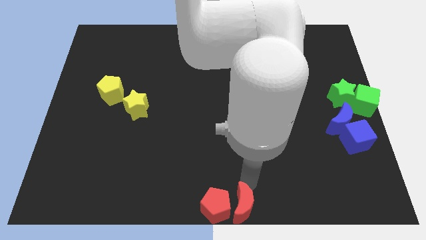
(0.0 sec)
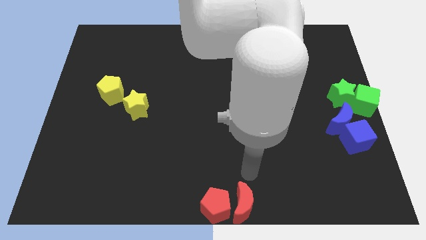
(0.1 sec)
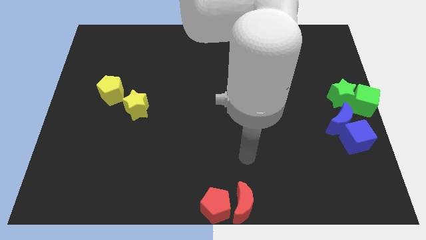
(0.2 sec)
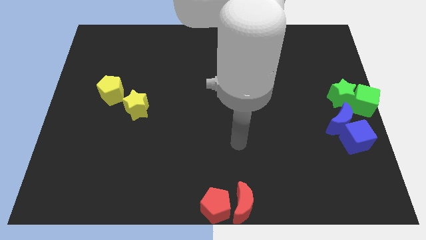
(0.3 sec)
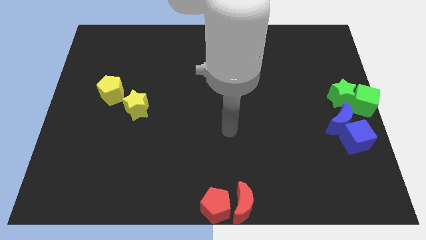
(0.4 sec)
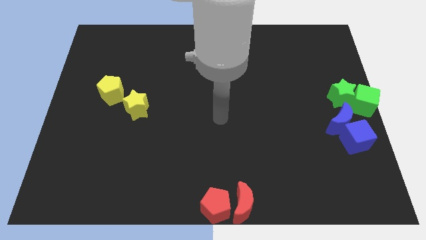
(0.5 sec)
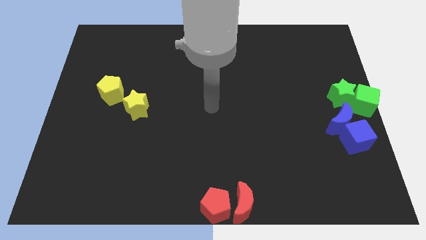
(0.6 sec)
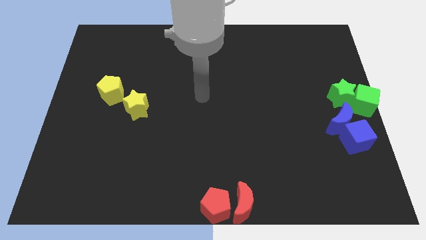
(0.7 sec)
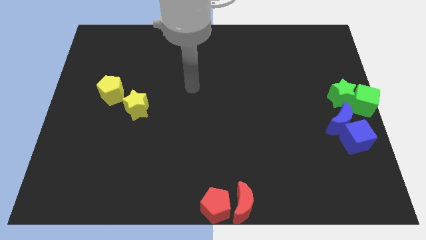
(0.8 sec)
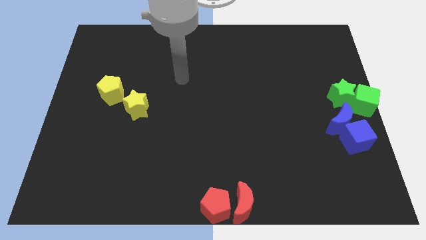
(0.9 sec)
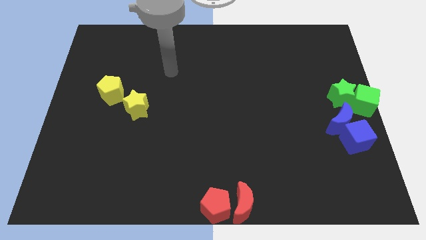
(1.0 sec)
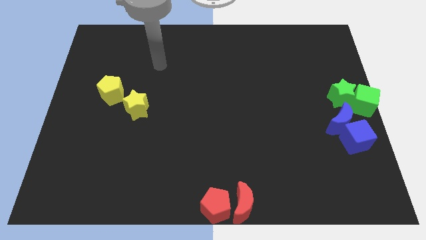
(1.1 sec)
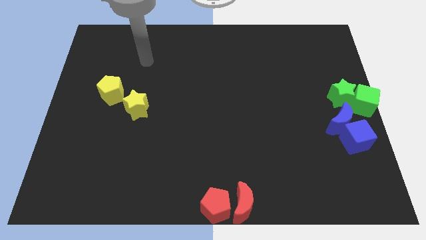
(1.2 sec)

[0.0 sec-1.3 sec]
move your arm away from the red moon

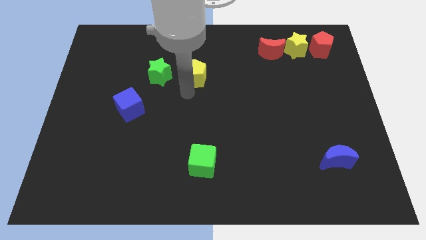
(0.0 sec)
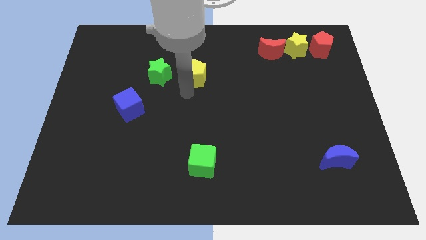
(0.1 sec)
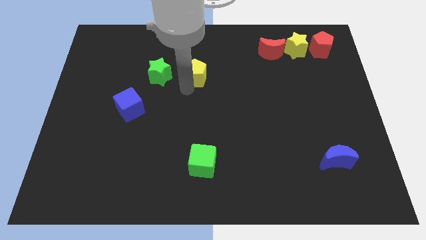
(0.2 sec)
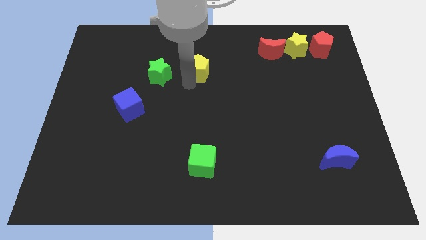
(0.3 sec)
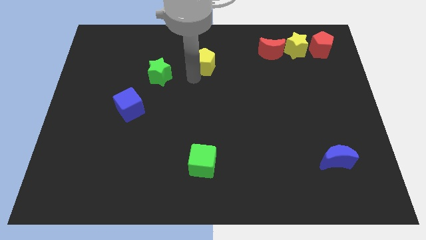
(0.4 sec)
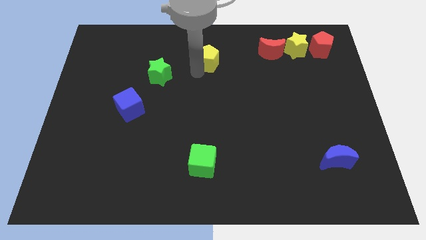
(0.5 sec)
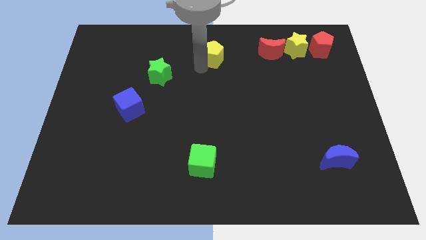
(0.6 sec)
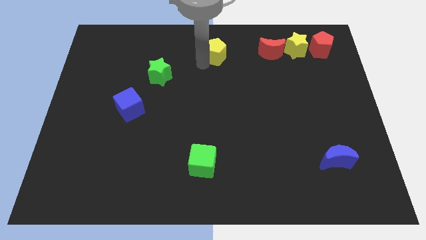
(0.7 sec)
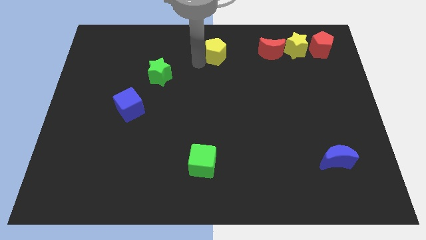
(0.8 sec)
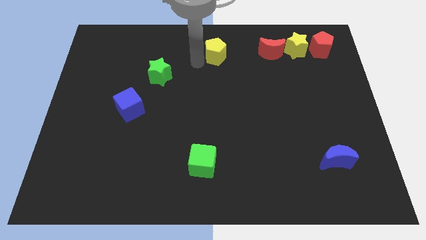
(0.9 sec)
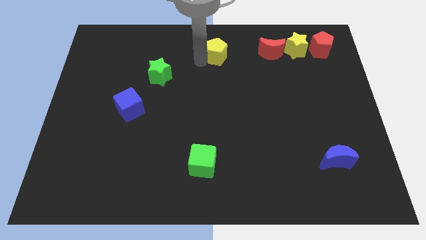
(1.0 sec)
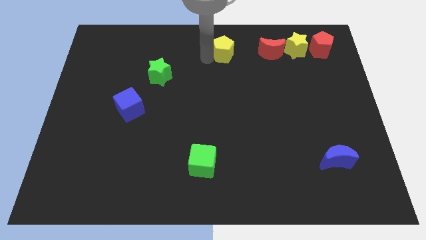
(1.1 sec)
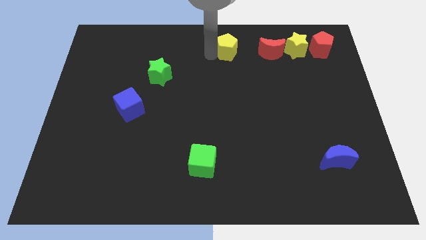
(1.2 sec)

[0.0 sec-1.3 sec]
place the yellow pentagon left to the red moon

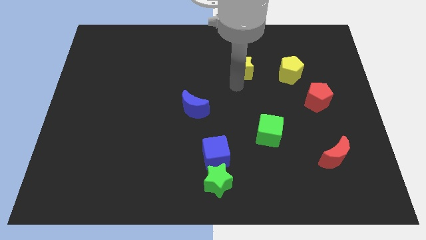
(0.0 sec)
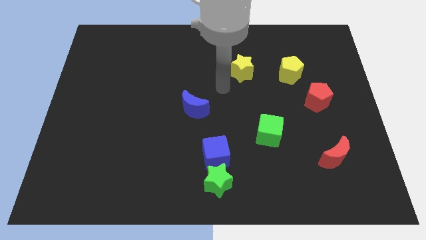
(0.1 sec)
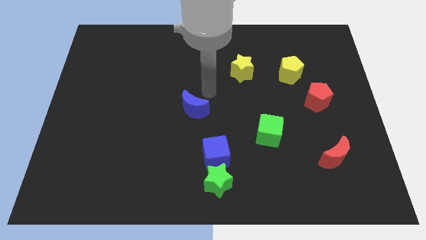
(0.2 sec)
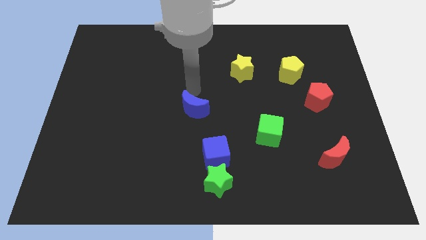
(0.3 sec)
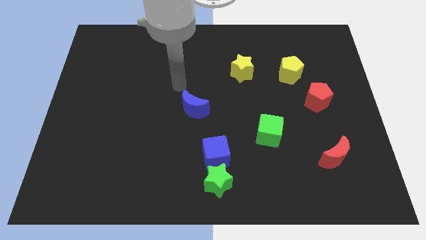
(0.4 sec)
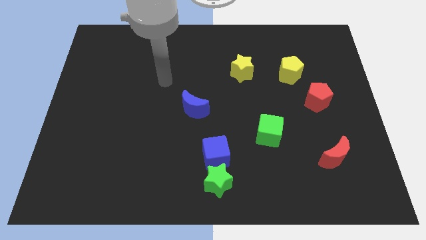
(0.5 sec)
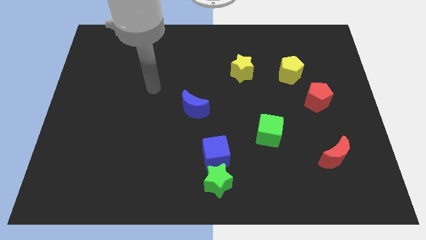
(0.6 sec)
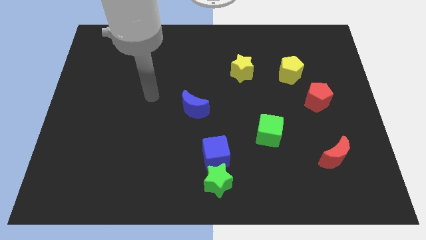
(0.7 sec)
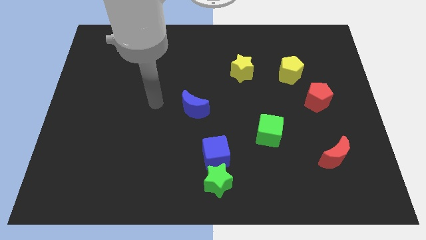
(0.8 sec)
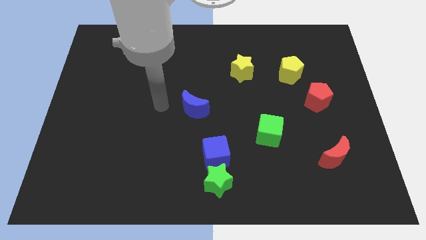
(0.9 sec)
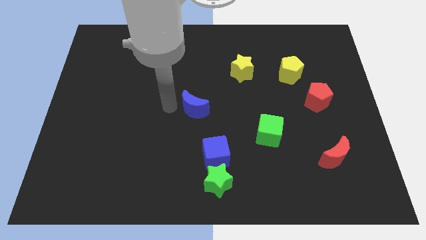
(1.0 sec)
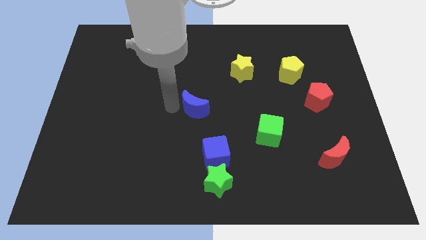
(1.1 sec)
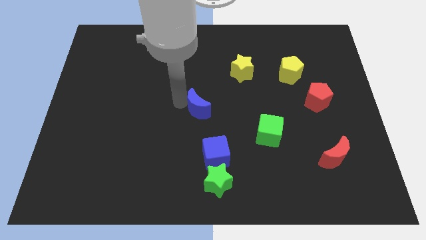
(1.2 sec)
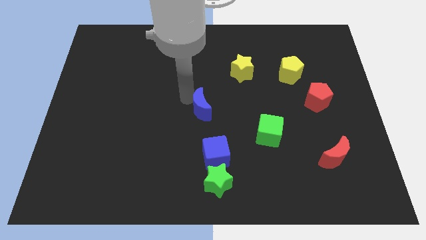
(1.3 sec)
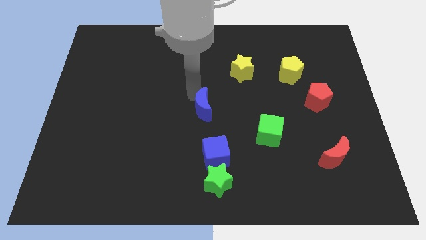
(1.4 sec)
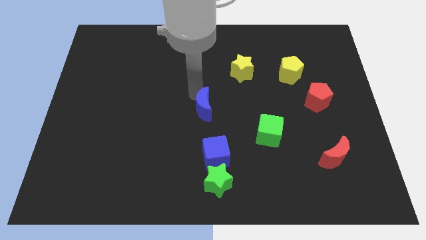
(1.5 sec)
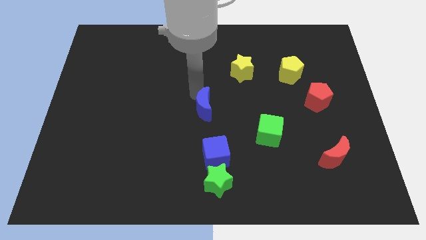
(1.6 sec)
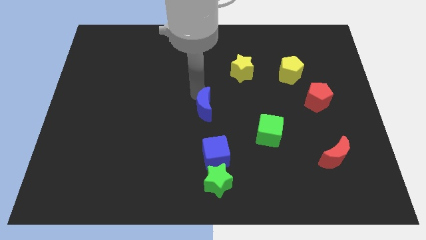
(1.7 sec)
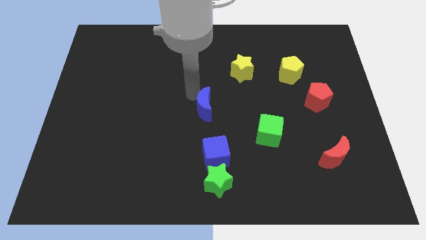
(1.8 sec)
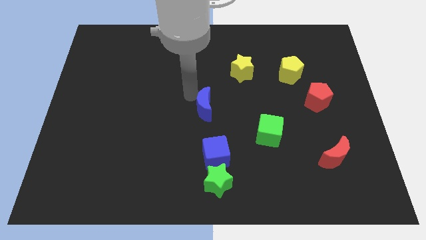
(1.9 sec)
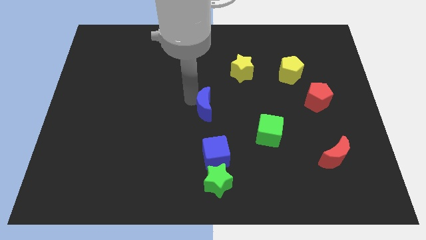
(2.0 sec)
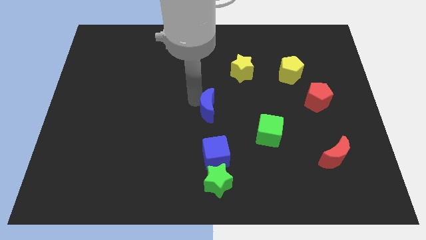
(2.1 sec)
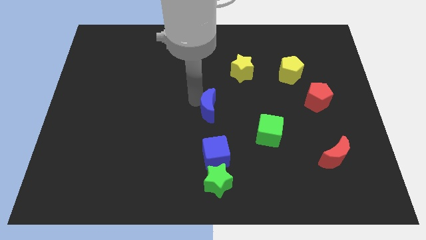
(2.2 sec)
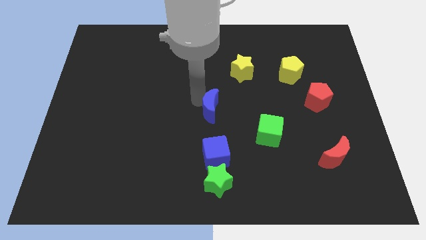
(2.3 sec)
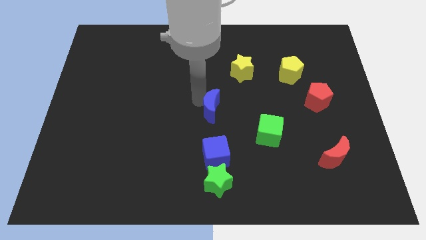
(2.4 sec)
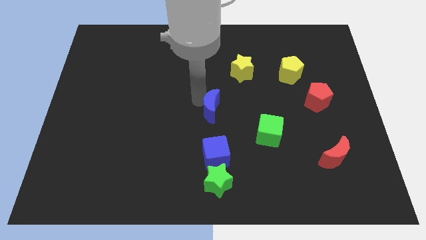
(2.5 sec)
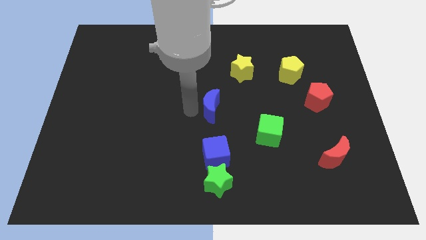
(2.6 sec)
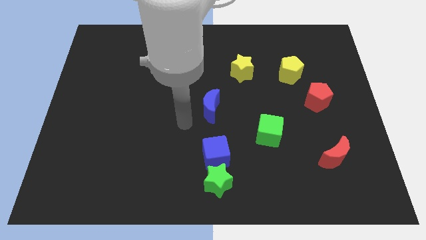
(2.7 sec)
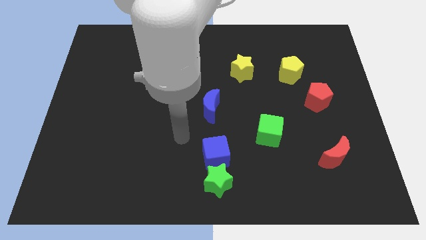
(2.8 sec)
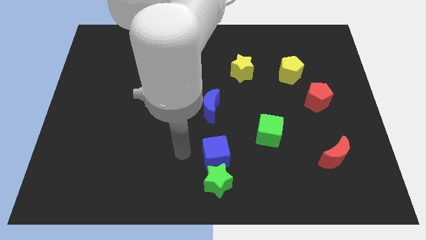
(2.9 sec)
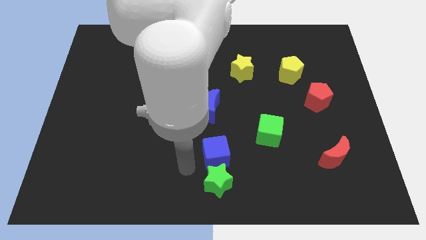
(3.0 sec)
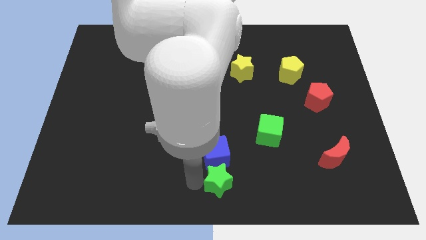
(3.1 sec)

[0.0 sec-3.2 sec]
push the blue crescent slightly to the top side of the blue cube

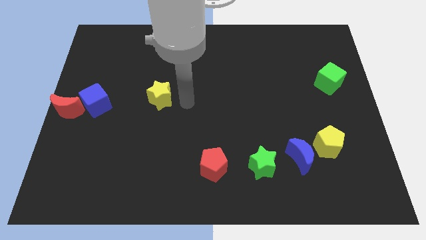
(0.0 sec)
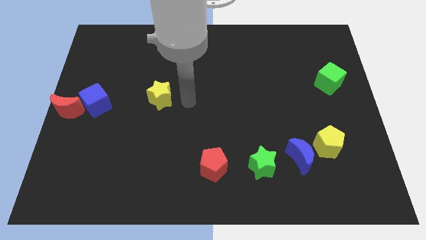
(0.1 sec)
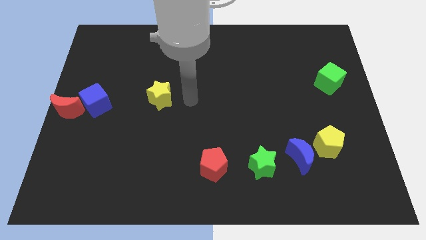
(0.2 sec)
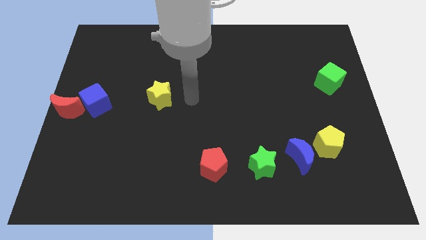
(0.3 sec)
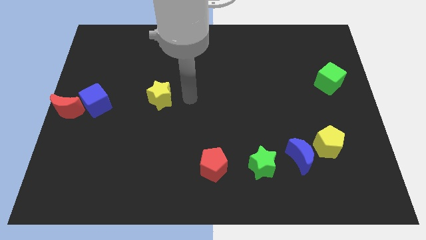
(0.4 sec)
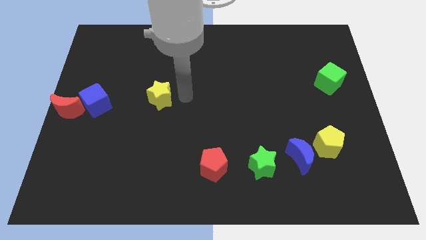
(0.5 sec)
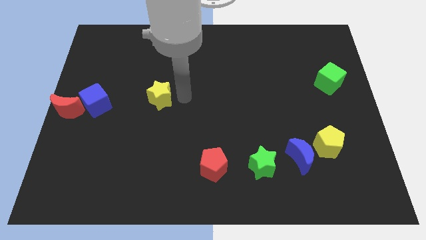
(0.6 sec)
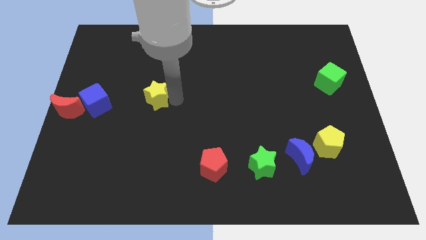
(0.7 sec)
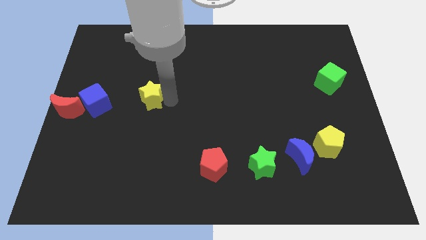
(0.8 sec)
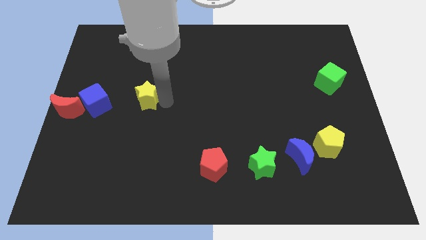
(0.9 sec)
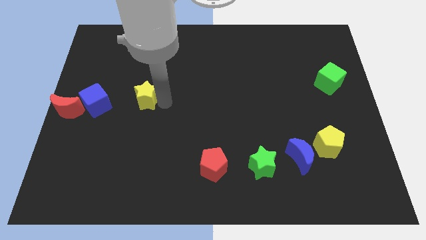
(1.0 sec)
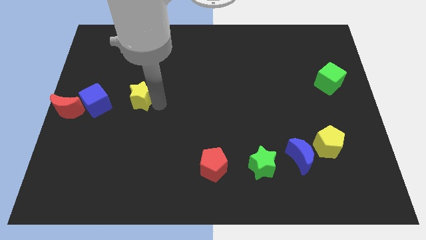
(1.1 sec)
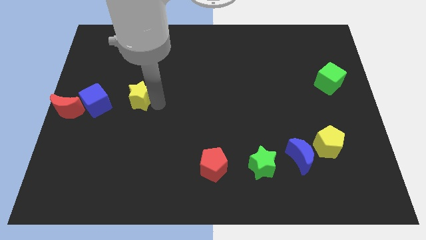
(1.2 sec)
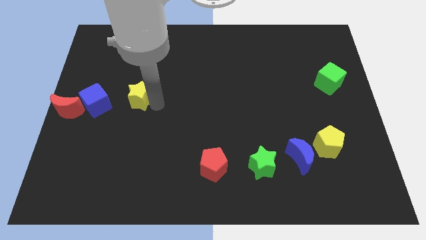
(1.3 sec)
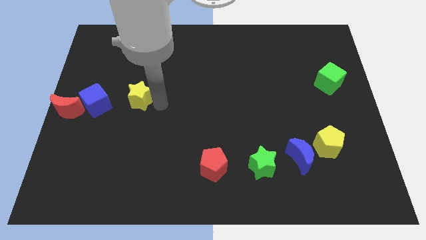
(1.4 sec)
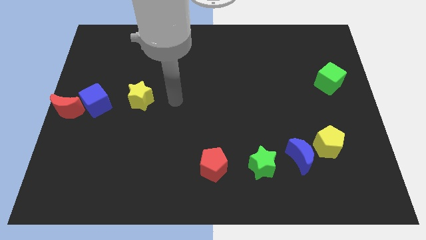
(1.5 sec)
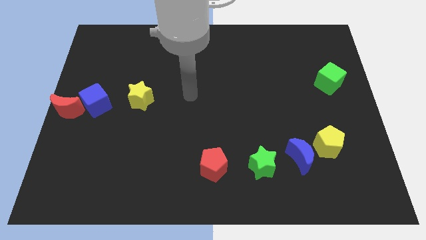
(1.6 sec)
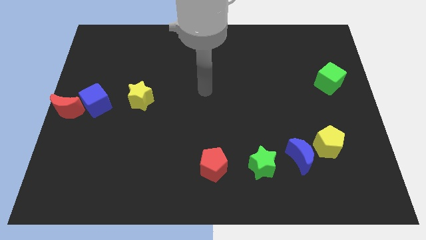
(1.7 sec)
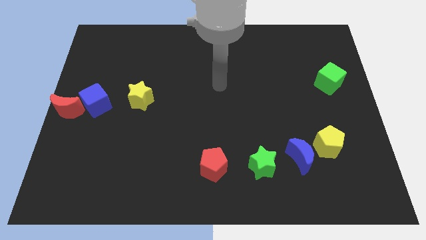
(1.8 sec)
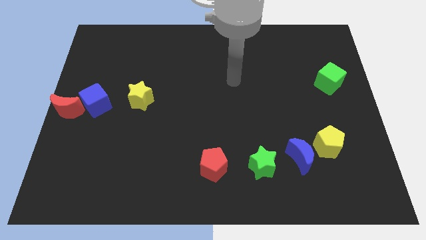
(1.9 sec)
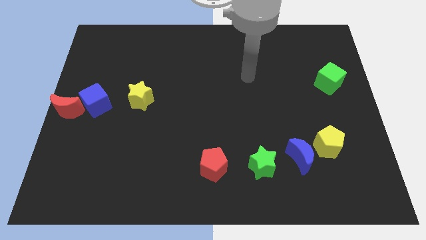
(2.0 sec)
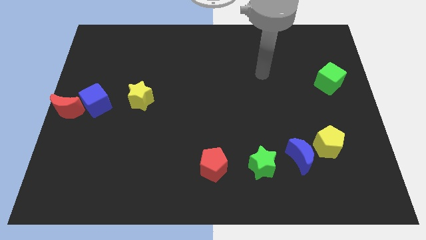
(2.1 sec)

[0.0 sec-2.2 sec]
push yellow star towards blue cube

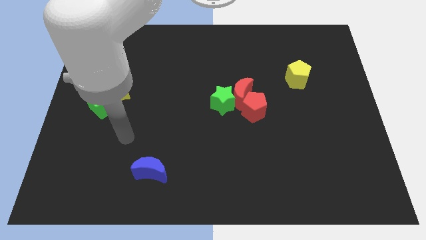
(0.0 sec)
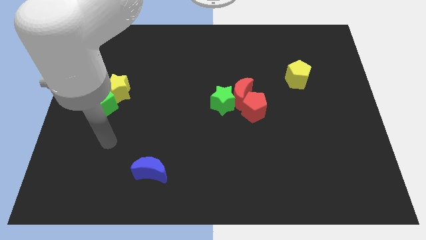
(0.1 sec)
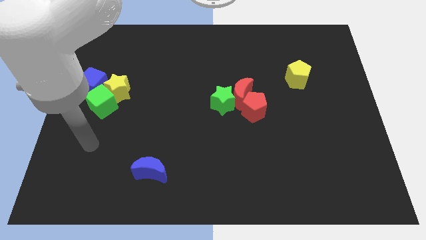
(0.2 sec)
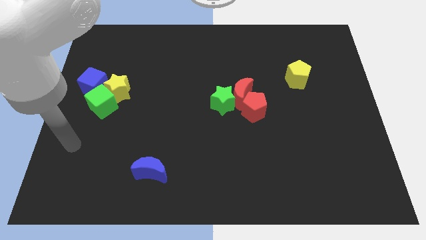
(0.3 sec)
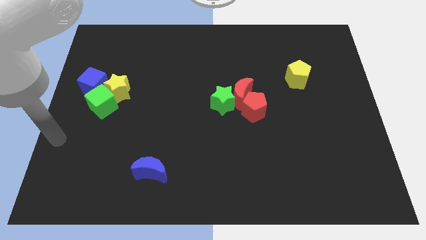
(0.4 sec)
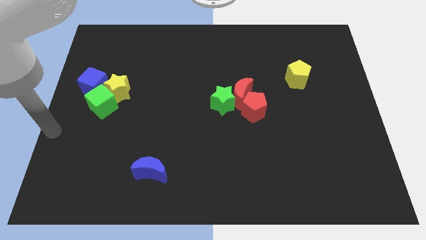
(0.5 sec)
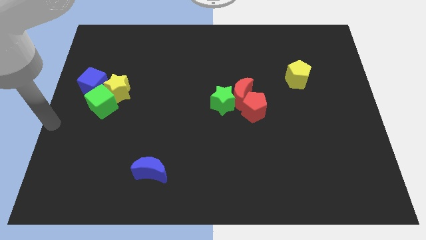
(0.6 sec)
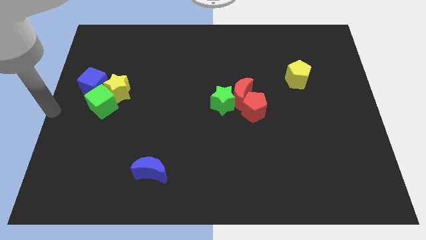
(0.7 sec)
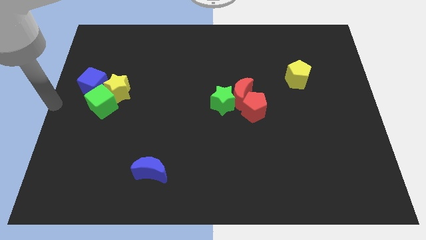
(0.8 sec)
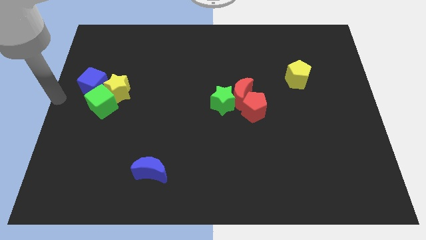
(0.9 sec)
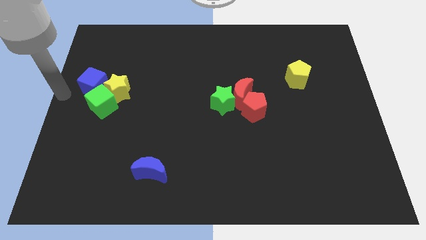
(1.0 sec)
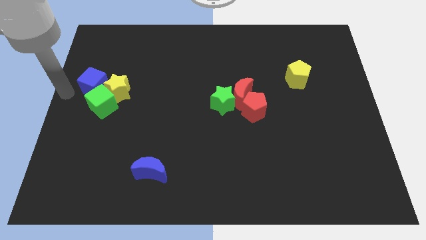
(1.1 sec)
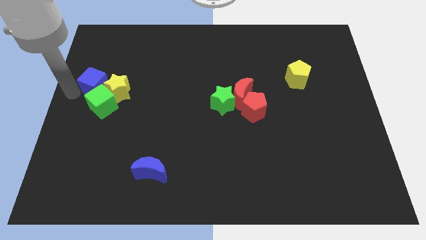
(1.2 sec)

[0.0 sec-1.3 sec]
point your hand to the left of the blue cube
